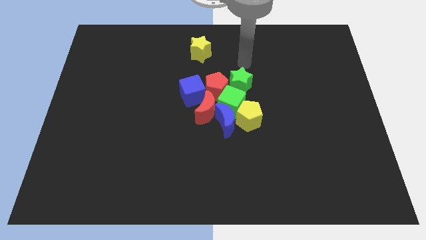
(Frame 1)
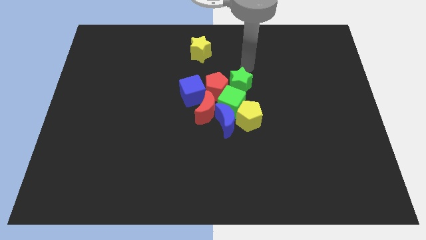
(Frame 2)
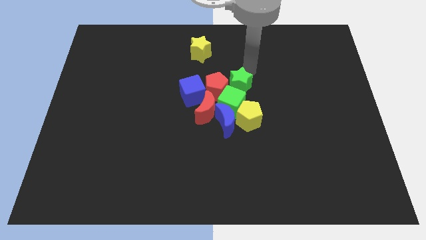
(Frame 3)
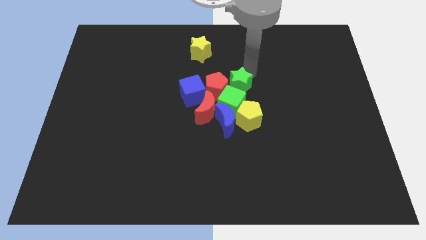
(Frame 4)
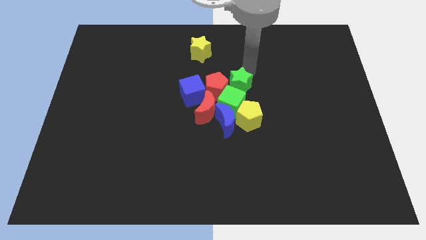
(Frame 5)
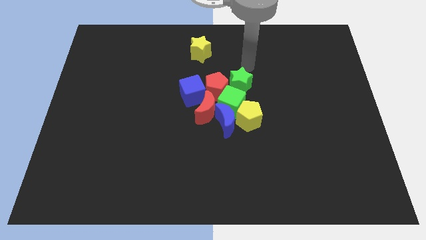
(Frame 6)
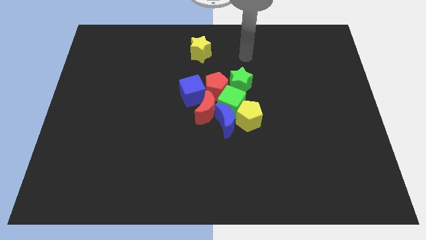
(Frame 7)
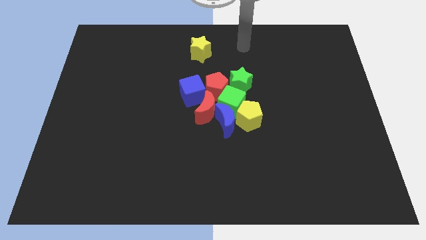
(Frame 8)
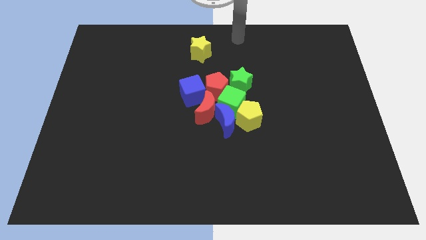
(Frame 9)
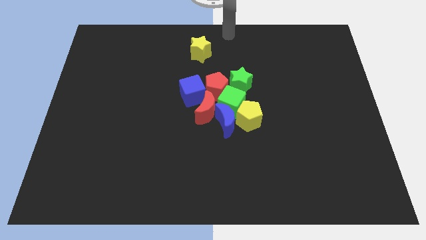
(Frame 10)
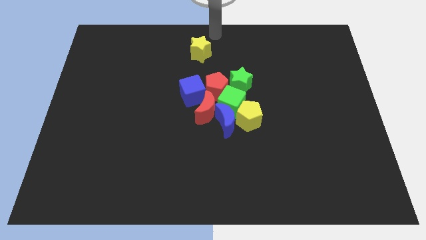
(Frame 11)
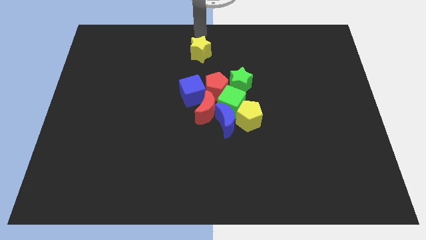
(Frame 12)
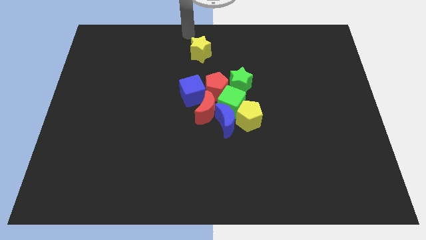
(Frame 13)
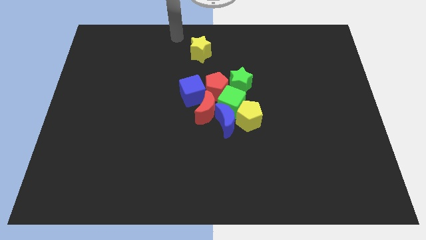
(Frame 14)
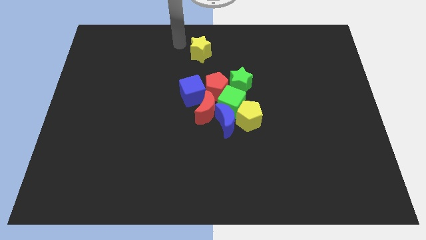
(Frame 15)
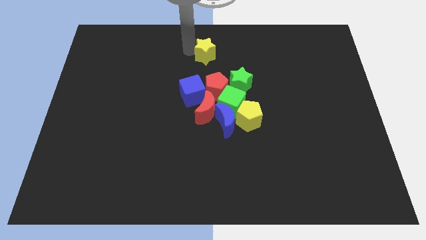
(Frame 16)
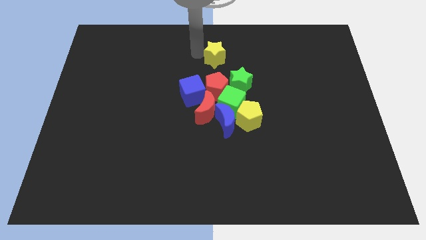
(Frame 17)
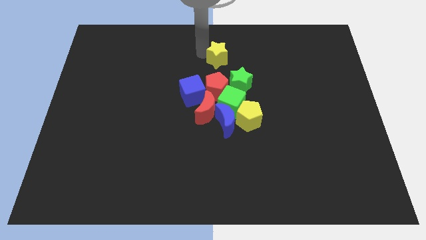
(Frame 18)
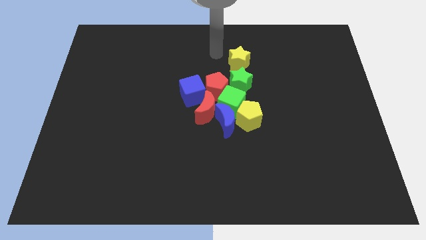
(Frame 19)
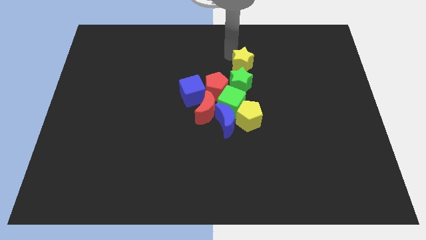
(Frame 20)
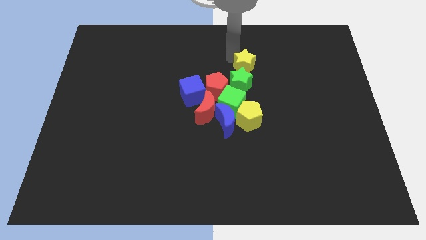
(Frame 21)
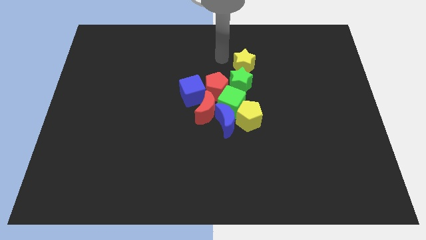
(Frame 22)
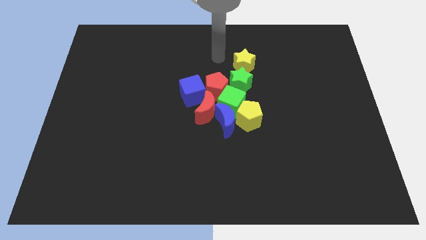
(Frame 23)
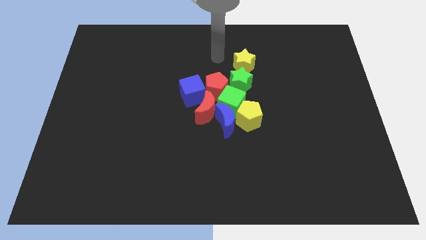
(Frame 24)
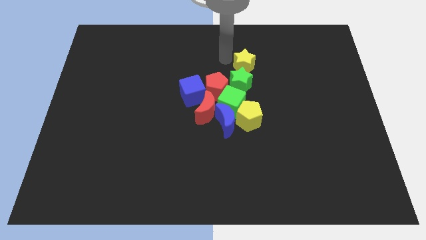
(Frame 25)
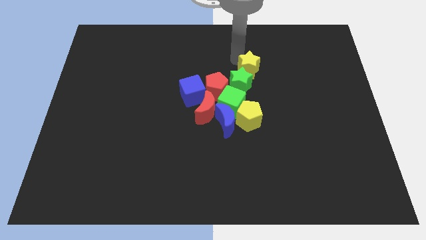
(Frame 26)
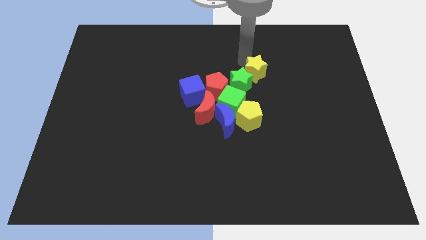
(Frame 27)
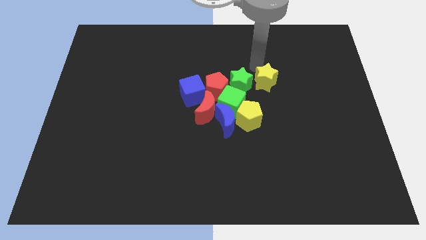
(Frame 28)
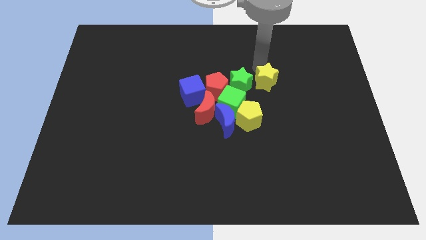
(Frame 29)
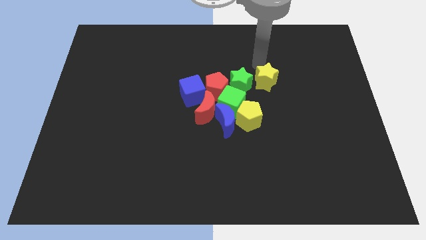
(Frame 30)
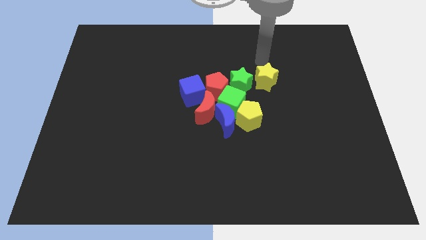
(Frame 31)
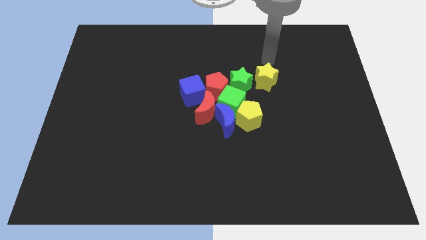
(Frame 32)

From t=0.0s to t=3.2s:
push yellow star to the right of green star

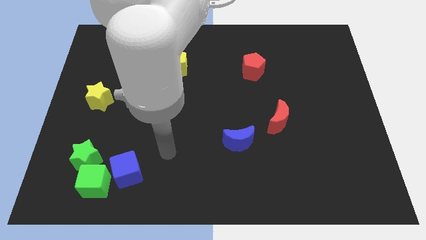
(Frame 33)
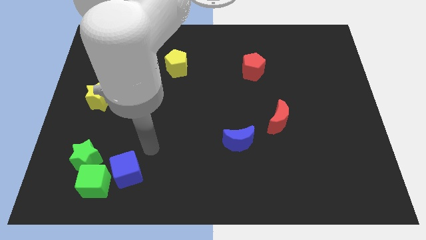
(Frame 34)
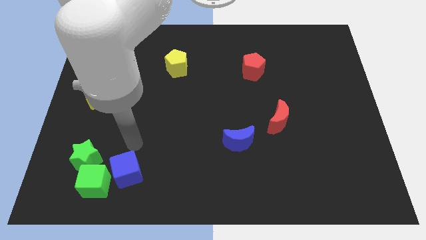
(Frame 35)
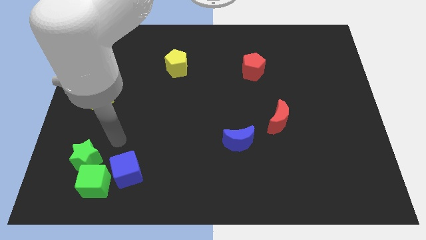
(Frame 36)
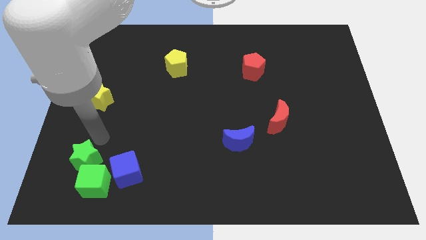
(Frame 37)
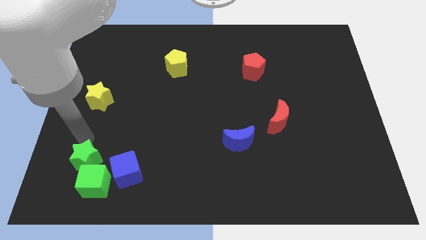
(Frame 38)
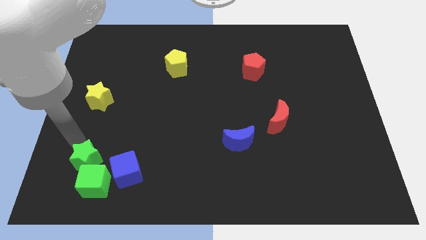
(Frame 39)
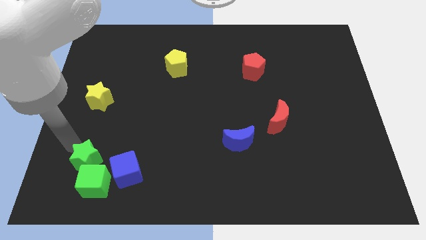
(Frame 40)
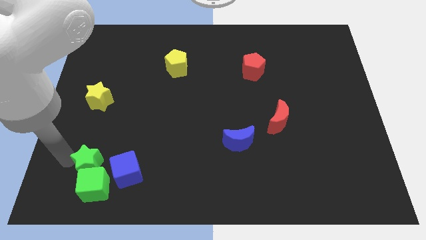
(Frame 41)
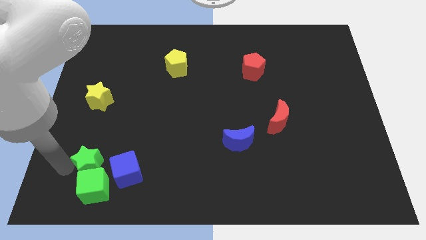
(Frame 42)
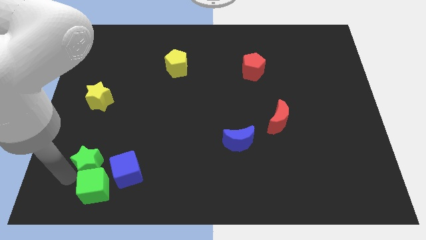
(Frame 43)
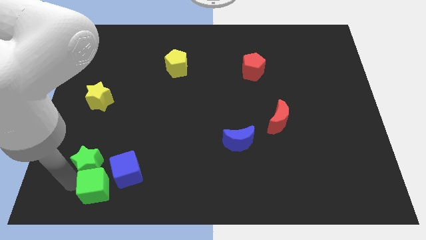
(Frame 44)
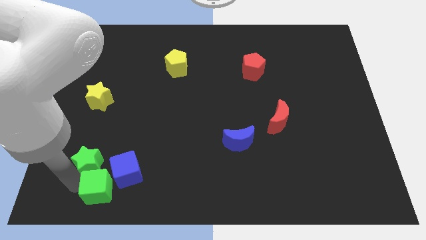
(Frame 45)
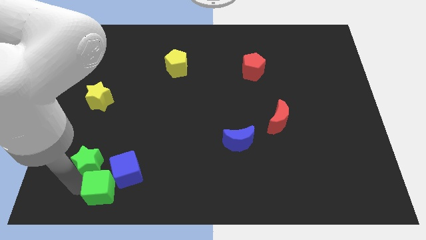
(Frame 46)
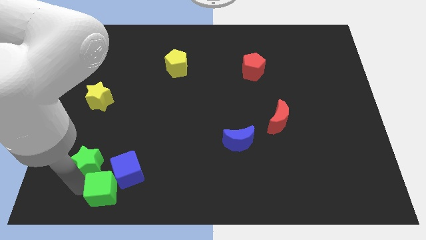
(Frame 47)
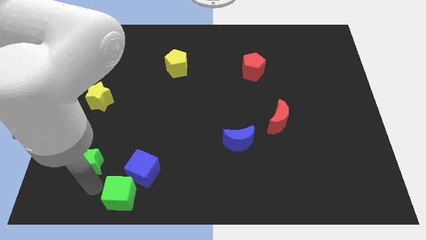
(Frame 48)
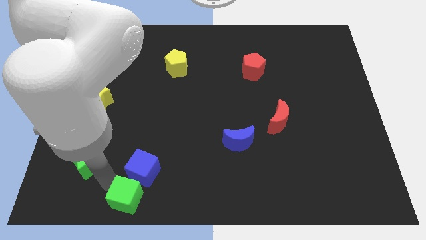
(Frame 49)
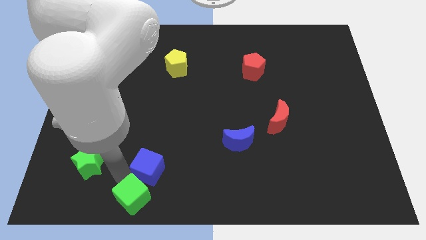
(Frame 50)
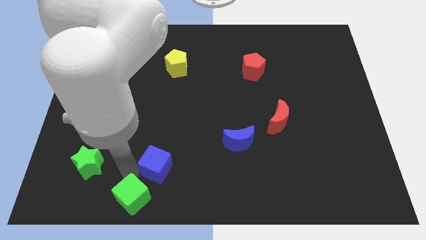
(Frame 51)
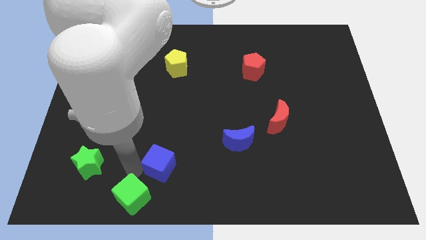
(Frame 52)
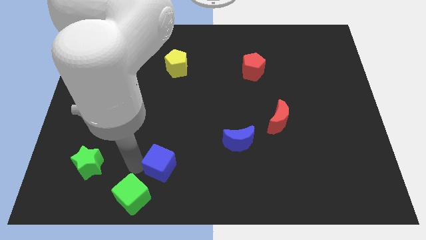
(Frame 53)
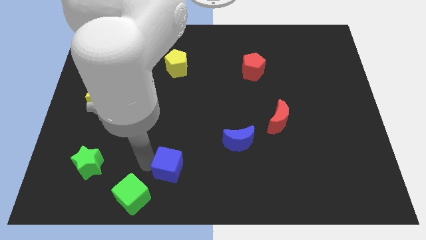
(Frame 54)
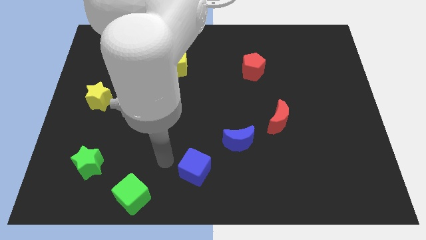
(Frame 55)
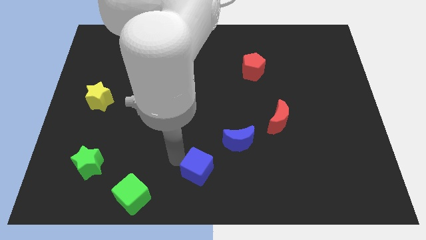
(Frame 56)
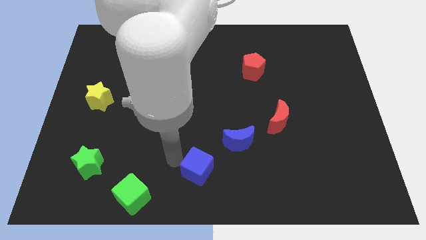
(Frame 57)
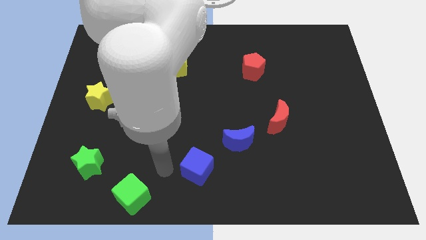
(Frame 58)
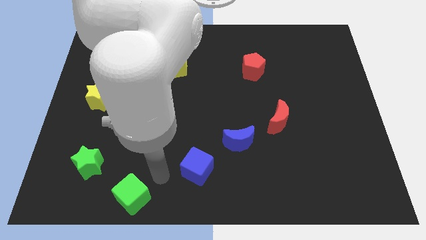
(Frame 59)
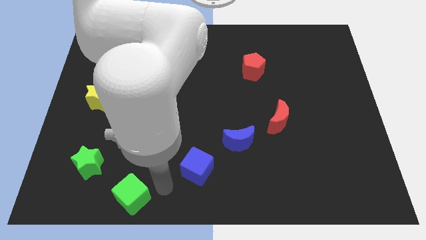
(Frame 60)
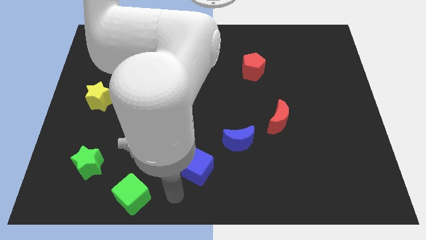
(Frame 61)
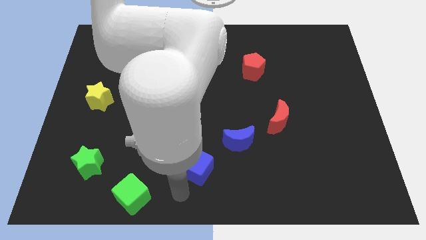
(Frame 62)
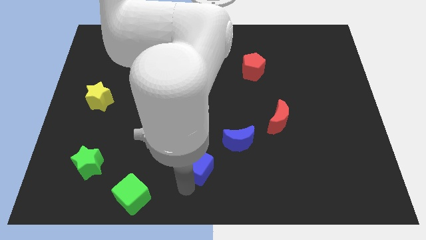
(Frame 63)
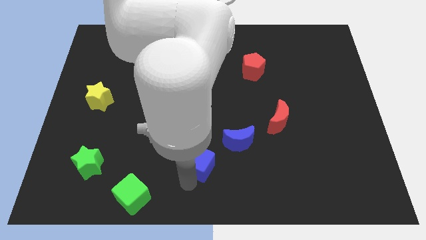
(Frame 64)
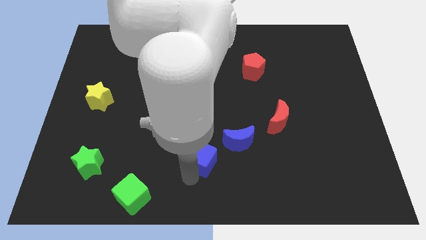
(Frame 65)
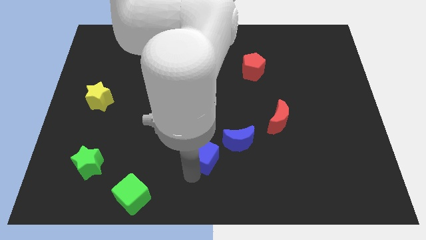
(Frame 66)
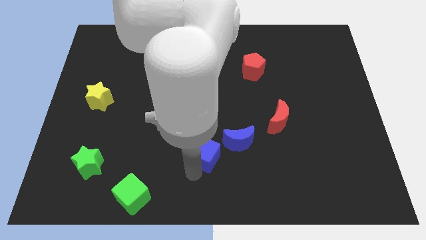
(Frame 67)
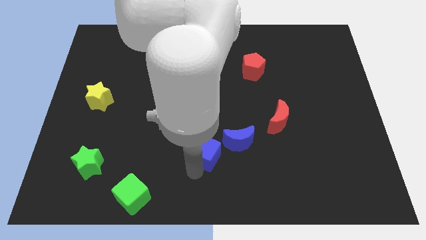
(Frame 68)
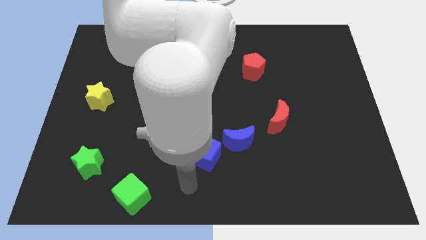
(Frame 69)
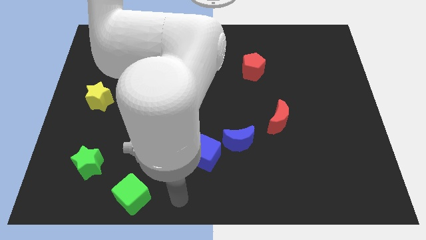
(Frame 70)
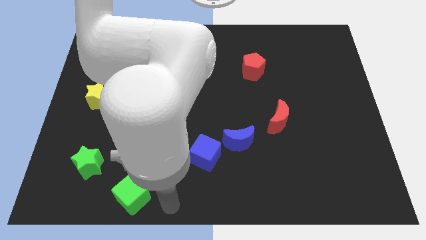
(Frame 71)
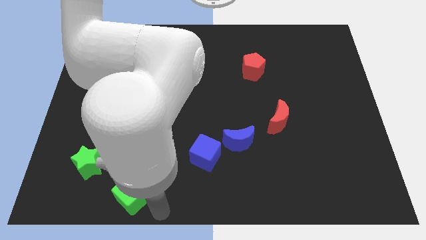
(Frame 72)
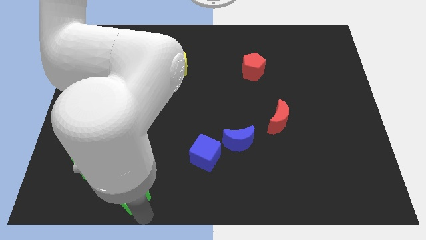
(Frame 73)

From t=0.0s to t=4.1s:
place the blue cube to the left of the blue crescent

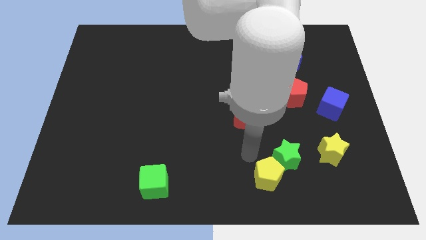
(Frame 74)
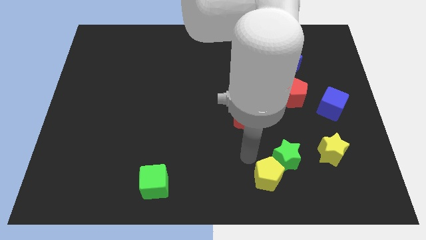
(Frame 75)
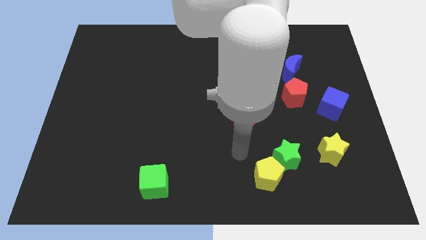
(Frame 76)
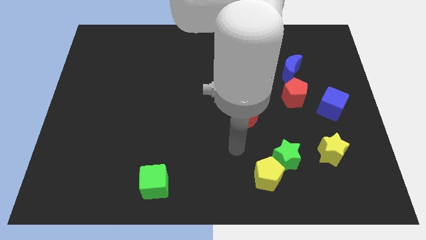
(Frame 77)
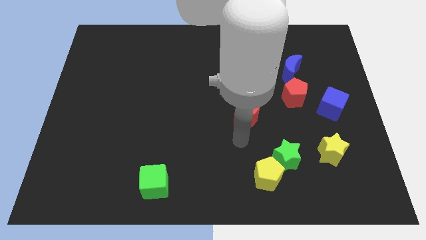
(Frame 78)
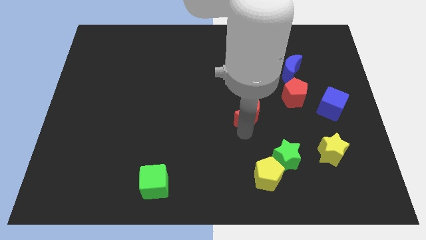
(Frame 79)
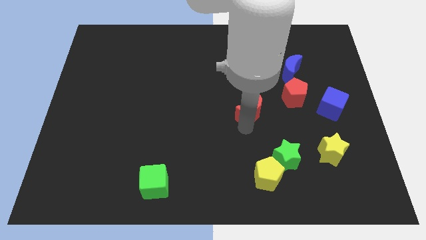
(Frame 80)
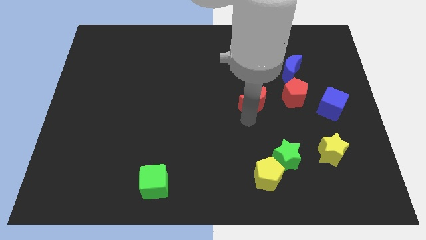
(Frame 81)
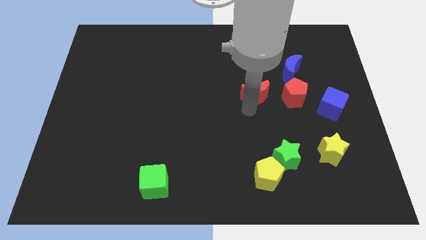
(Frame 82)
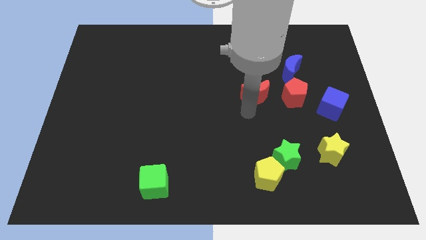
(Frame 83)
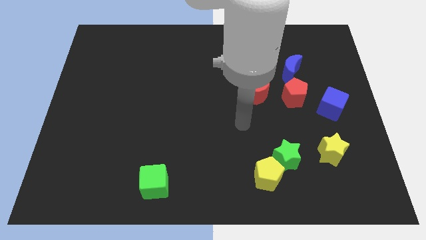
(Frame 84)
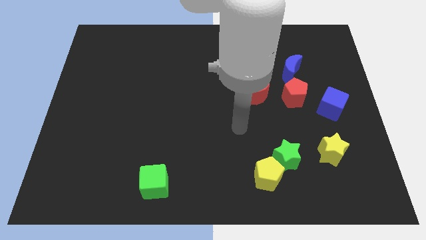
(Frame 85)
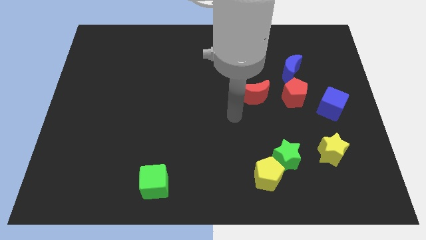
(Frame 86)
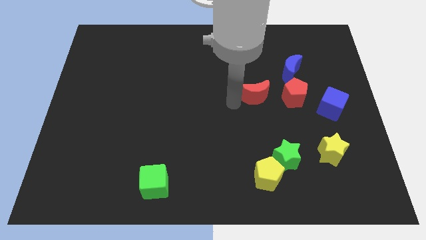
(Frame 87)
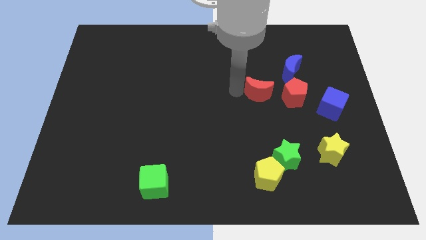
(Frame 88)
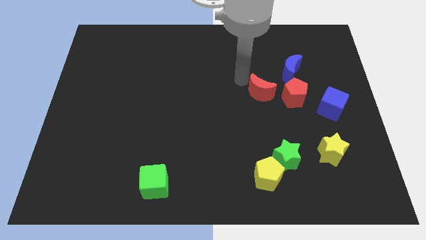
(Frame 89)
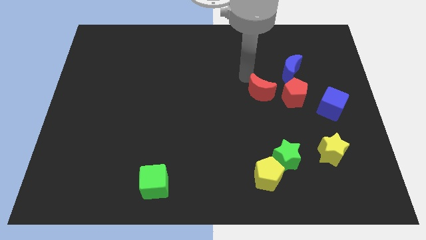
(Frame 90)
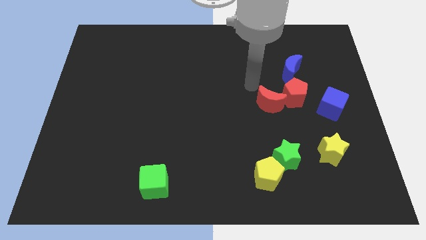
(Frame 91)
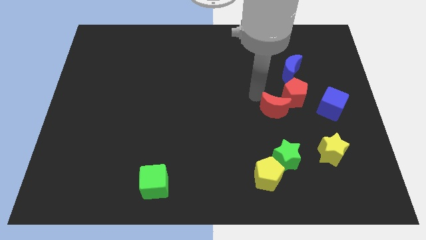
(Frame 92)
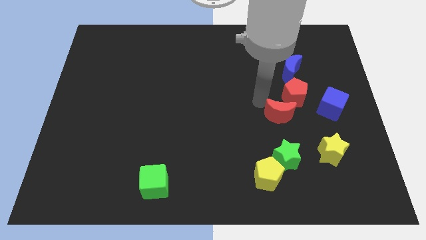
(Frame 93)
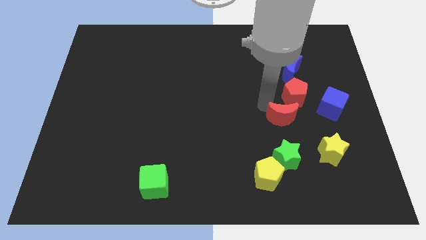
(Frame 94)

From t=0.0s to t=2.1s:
move the red moon at the bottom left side of the red pentagon
